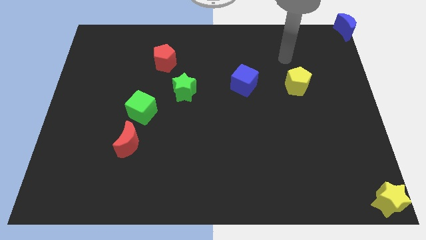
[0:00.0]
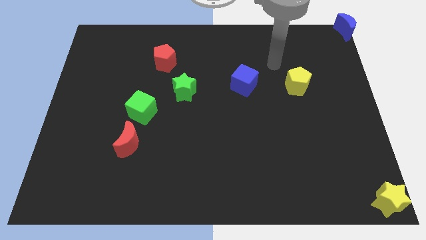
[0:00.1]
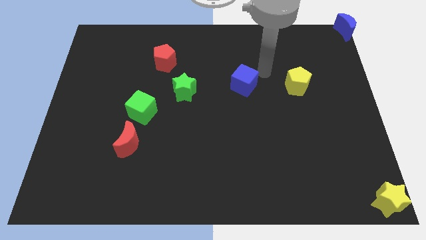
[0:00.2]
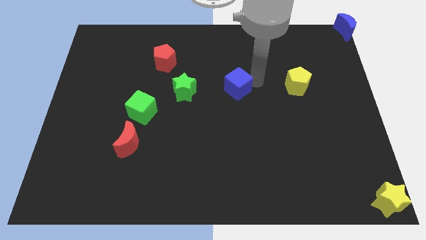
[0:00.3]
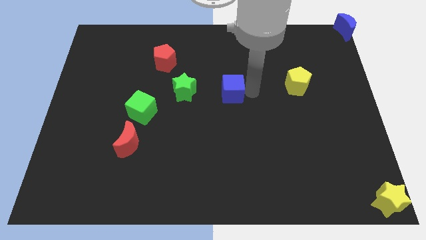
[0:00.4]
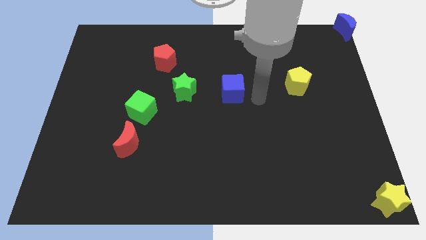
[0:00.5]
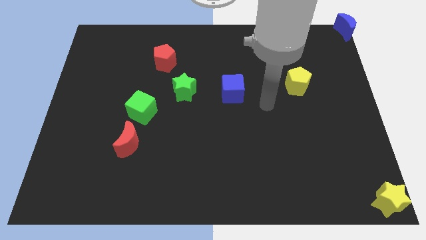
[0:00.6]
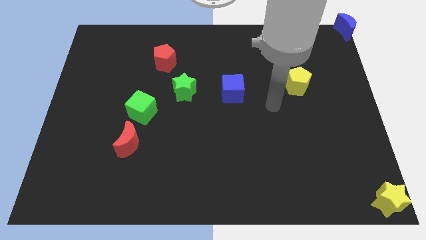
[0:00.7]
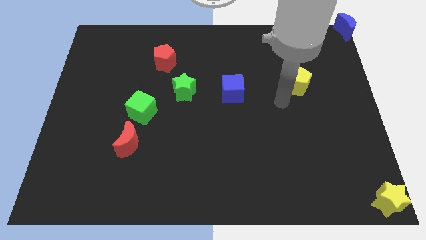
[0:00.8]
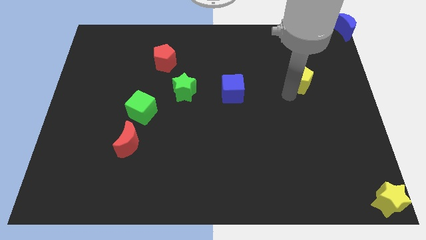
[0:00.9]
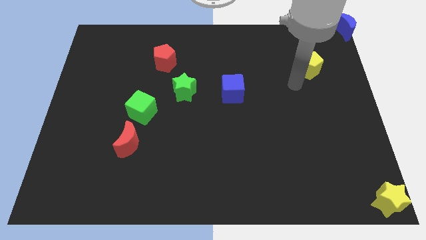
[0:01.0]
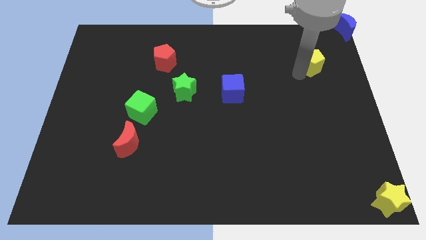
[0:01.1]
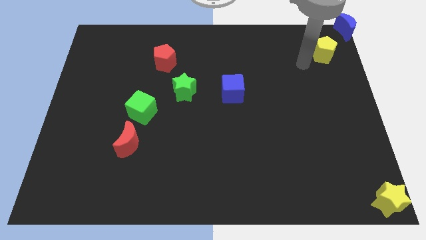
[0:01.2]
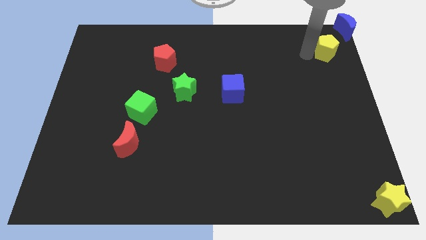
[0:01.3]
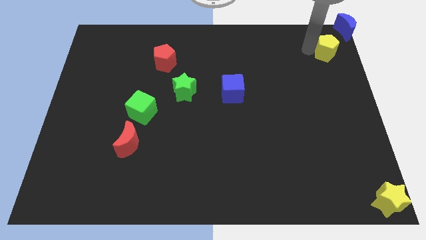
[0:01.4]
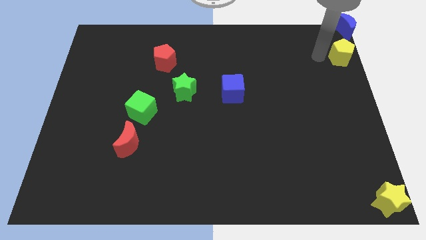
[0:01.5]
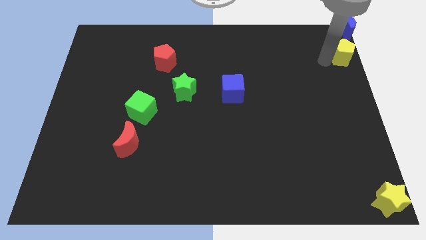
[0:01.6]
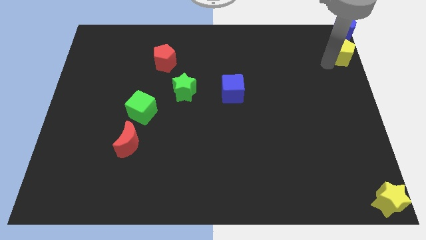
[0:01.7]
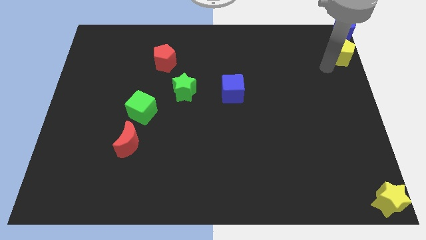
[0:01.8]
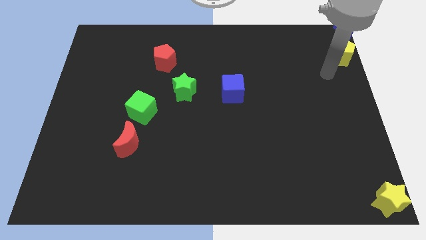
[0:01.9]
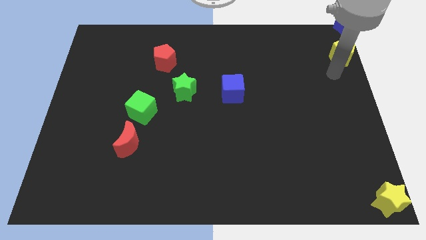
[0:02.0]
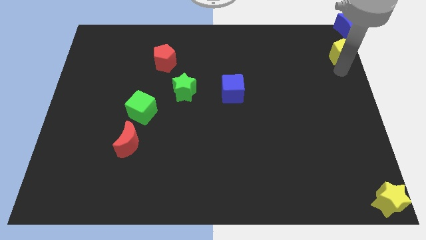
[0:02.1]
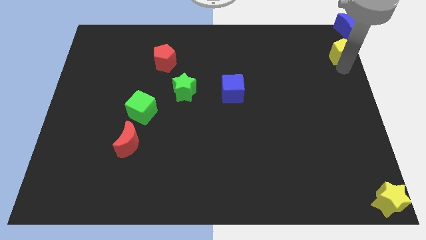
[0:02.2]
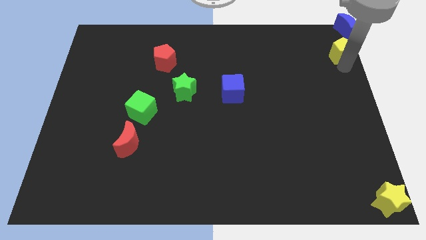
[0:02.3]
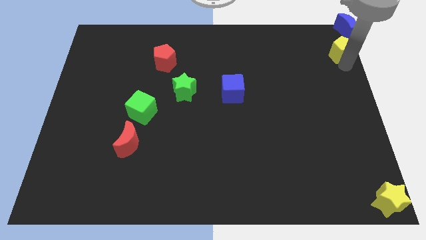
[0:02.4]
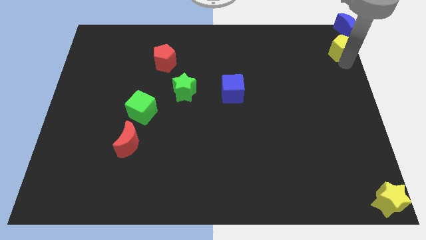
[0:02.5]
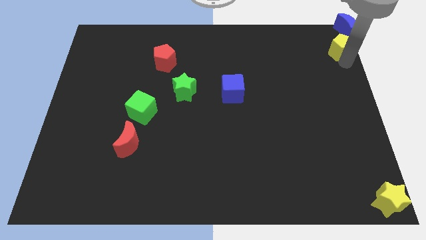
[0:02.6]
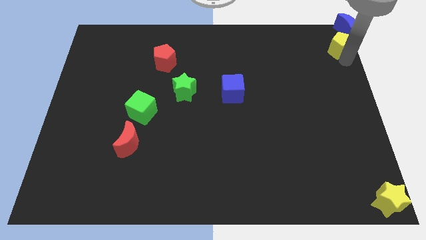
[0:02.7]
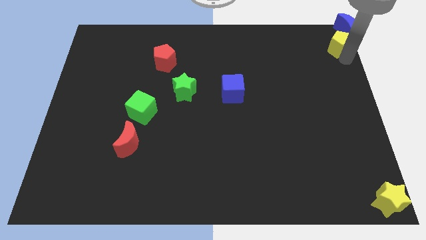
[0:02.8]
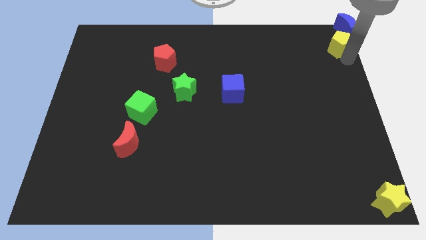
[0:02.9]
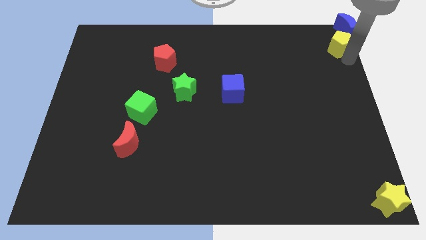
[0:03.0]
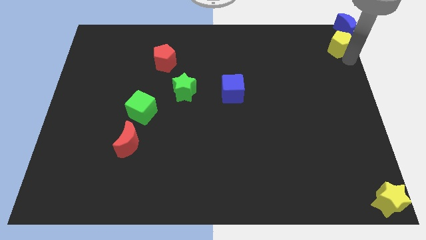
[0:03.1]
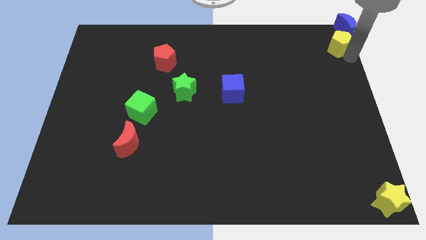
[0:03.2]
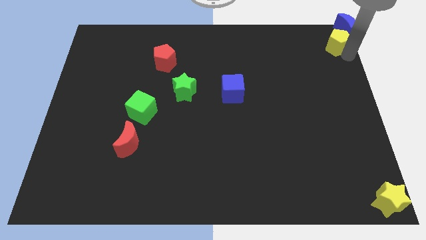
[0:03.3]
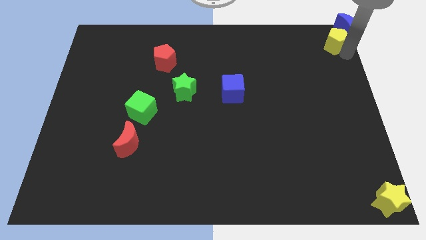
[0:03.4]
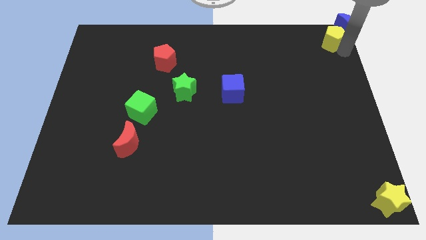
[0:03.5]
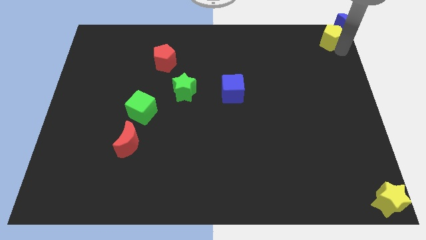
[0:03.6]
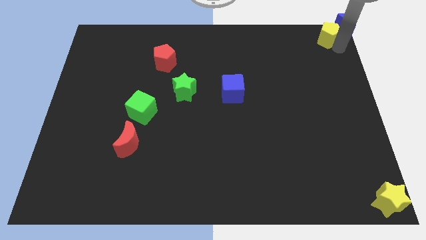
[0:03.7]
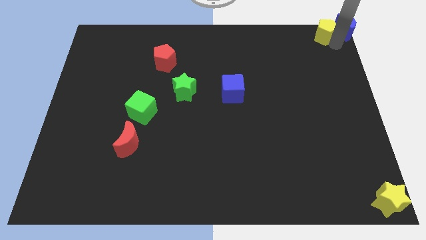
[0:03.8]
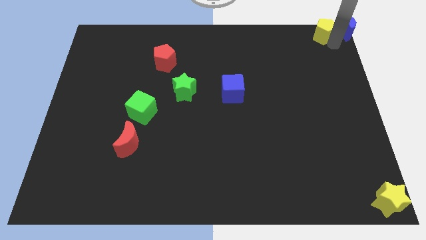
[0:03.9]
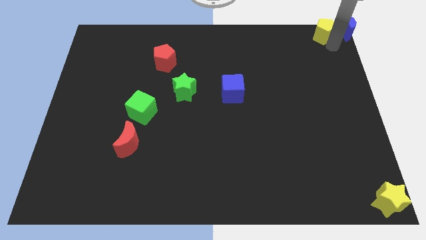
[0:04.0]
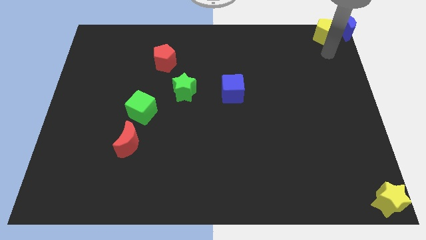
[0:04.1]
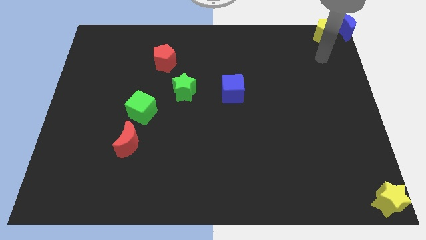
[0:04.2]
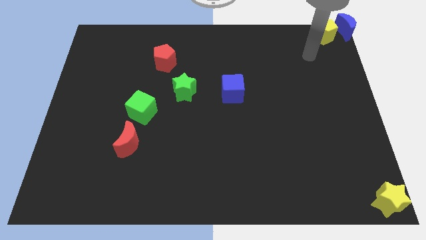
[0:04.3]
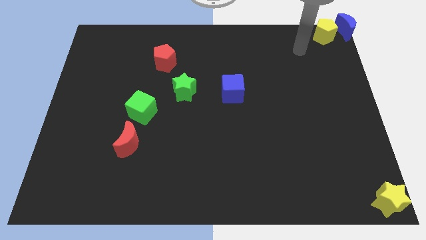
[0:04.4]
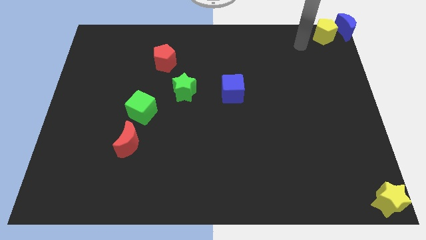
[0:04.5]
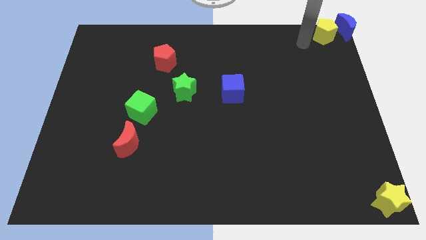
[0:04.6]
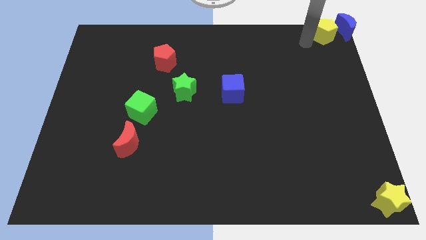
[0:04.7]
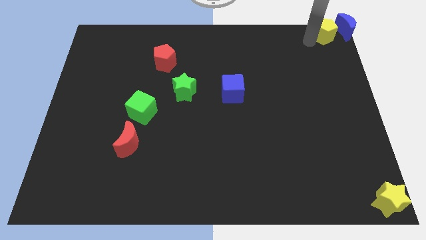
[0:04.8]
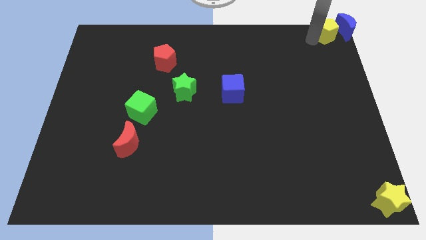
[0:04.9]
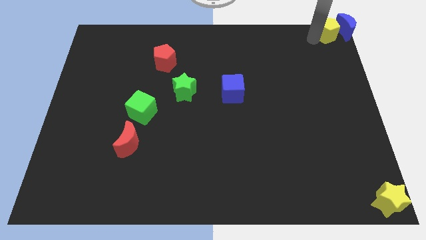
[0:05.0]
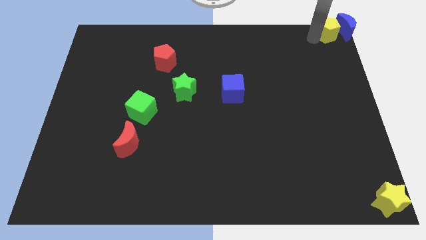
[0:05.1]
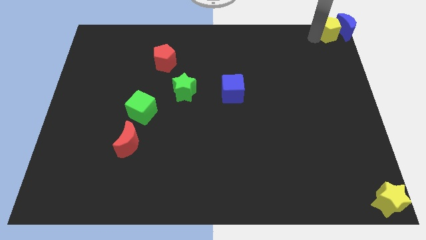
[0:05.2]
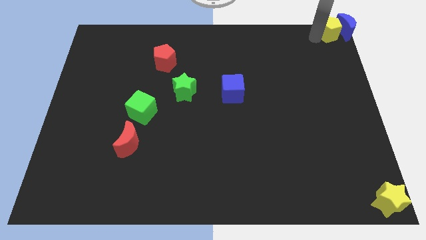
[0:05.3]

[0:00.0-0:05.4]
push the yellow pentagon into the blue crescent

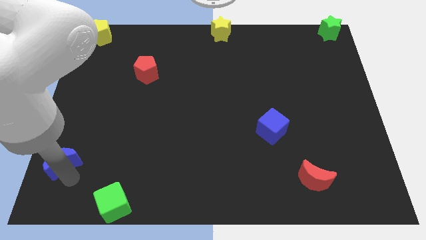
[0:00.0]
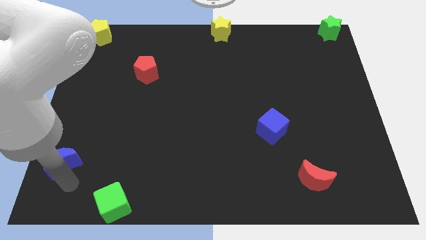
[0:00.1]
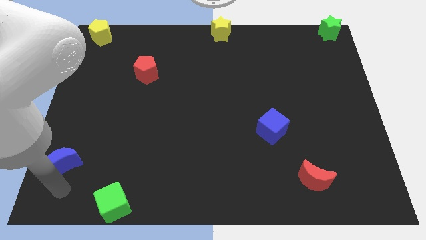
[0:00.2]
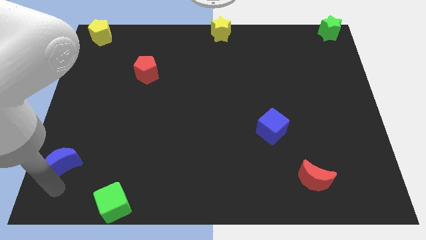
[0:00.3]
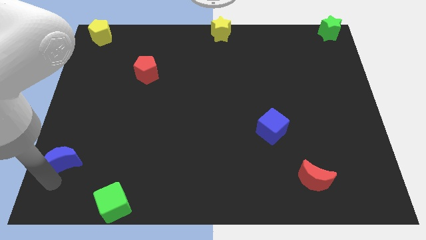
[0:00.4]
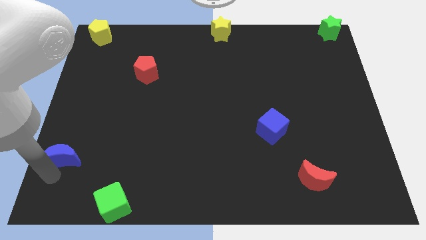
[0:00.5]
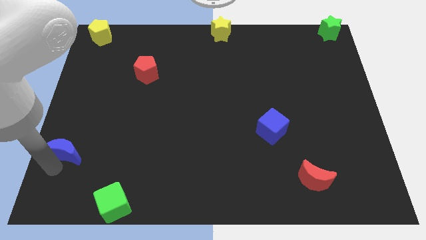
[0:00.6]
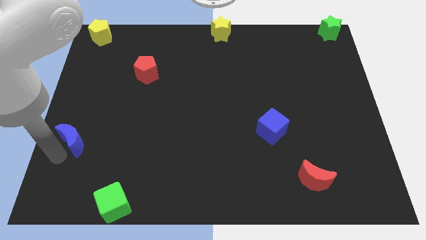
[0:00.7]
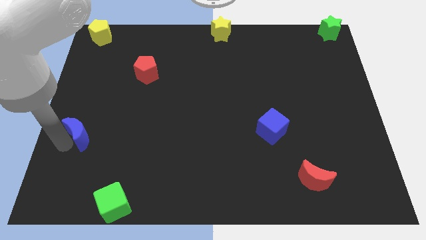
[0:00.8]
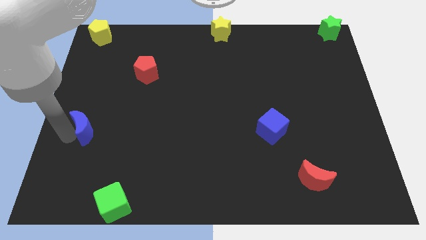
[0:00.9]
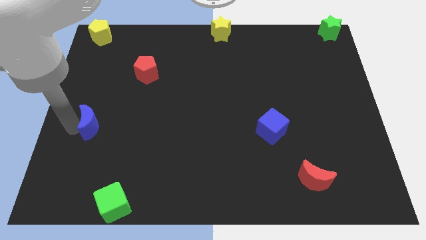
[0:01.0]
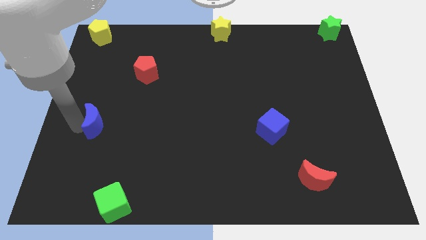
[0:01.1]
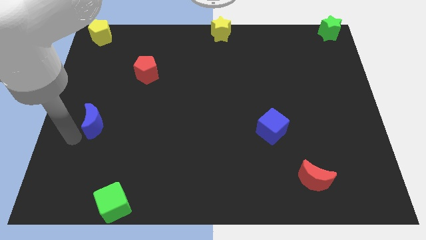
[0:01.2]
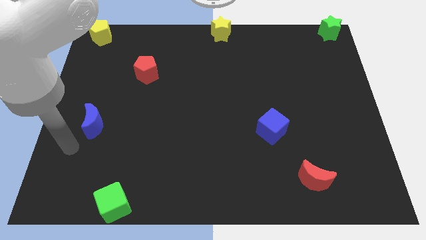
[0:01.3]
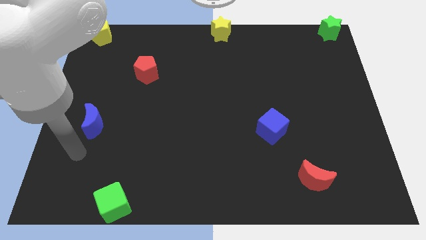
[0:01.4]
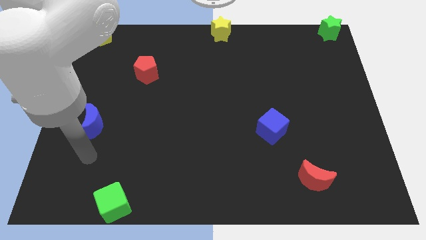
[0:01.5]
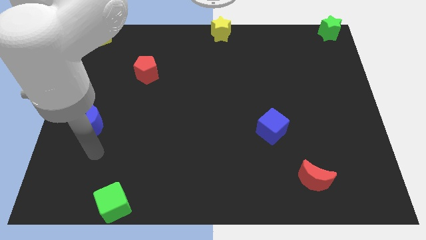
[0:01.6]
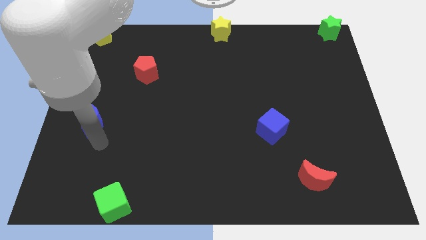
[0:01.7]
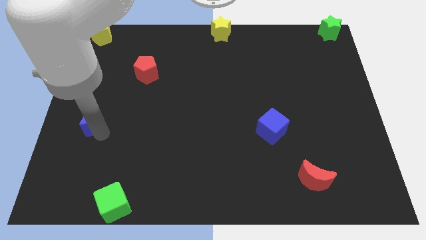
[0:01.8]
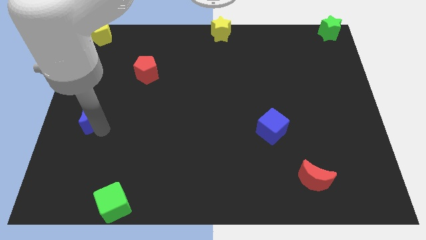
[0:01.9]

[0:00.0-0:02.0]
move the blue moon slightly upwards

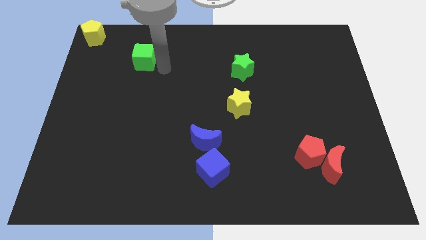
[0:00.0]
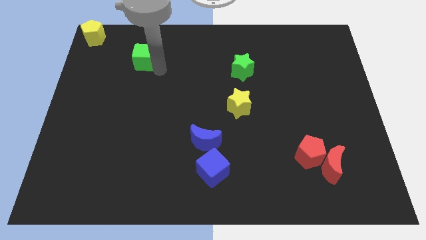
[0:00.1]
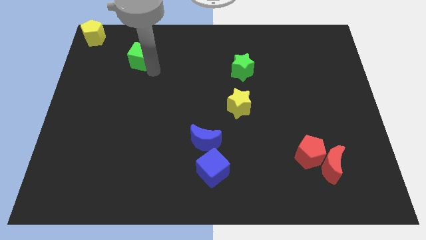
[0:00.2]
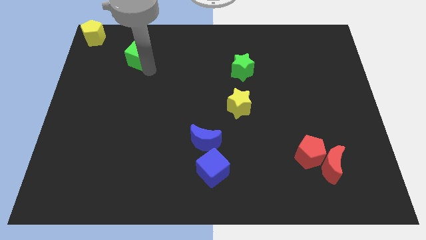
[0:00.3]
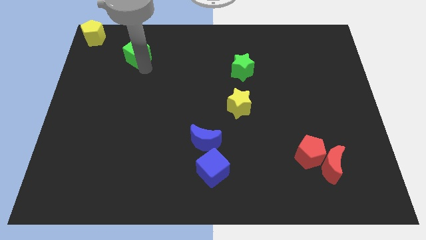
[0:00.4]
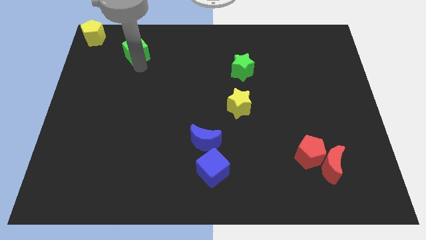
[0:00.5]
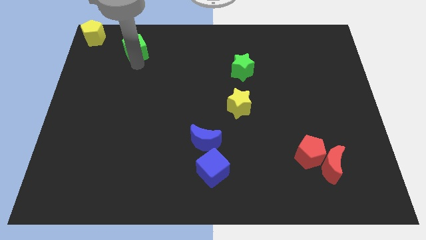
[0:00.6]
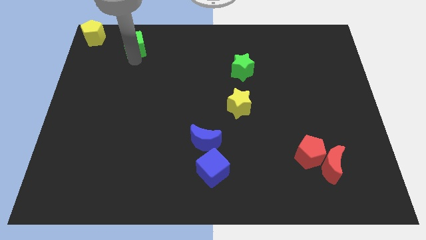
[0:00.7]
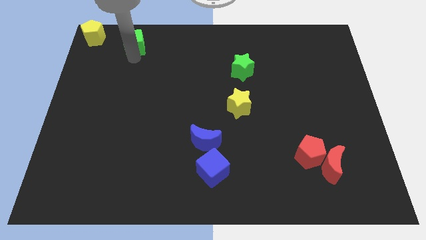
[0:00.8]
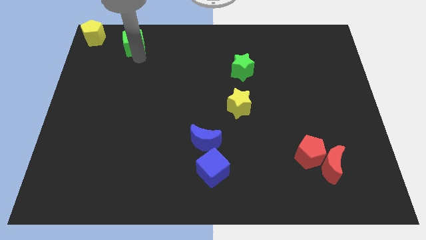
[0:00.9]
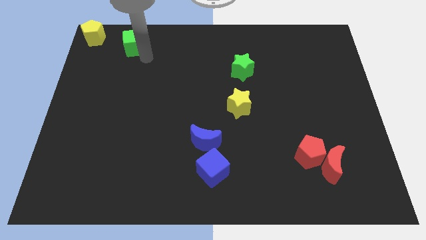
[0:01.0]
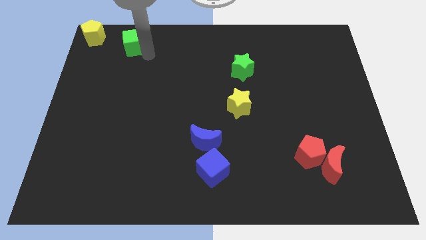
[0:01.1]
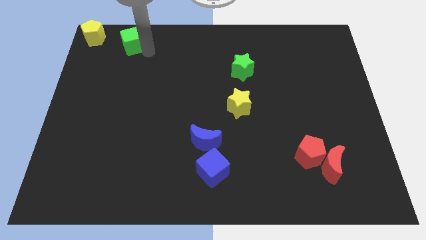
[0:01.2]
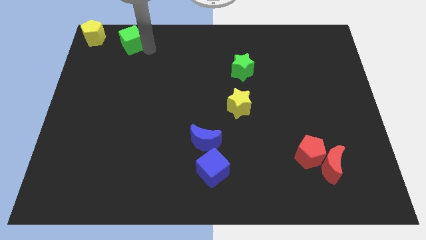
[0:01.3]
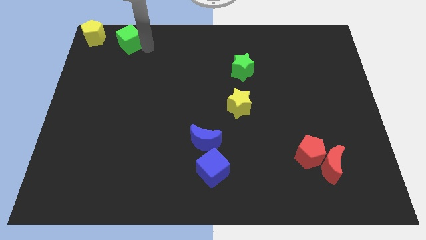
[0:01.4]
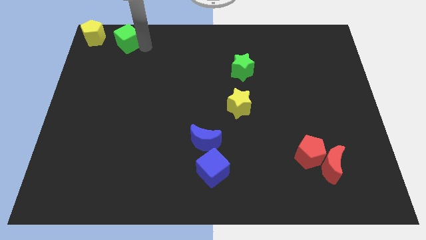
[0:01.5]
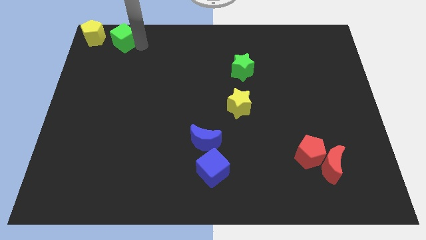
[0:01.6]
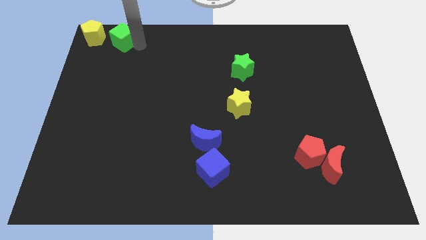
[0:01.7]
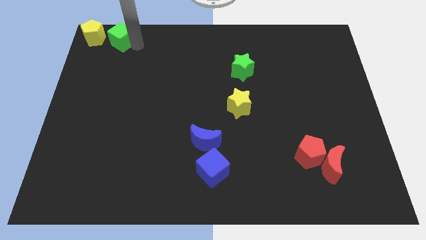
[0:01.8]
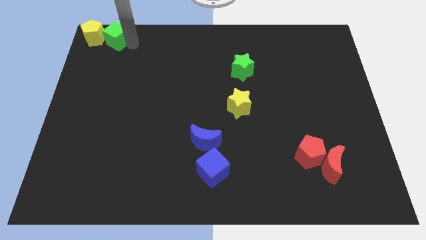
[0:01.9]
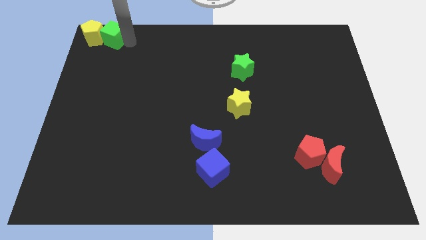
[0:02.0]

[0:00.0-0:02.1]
slide green cube to the top left
